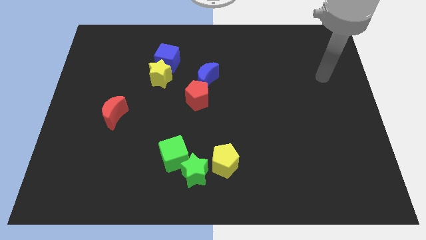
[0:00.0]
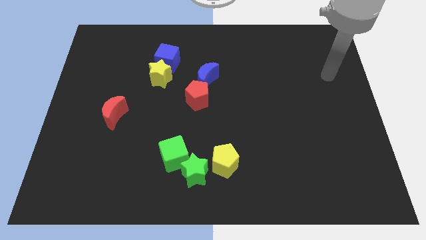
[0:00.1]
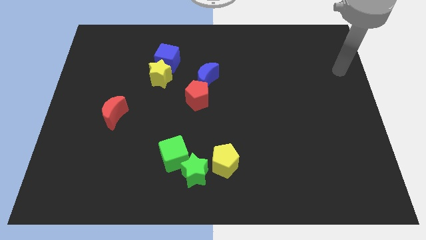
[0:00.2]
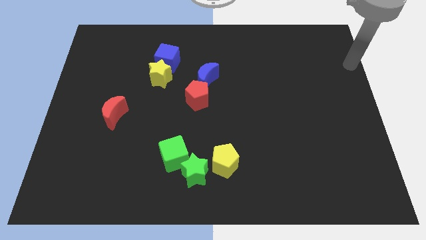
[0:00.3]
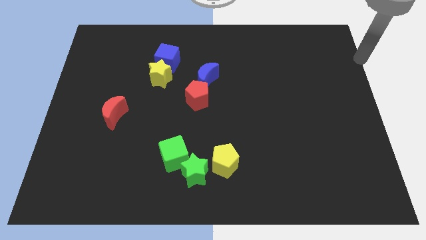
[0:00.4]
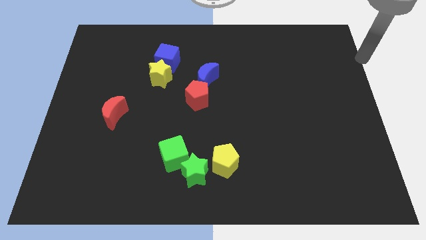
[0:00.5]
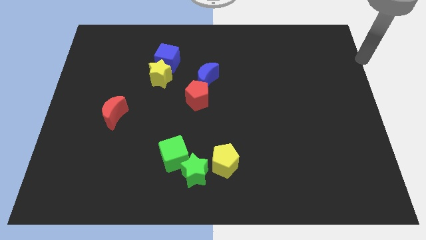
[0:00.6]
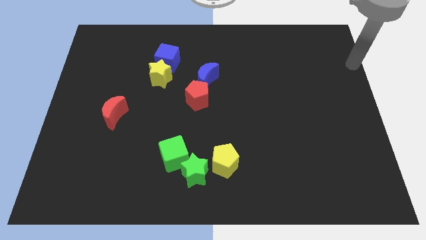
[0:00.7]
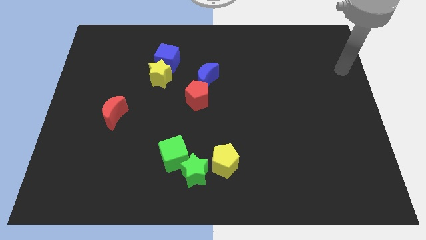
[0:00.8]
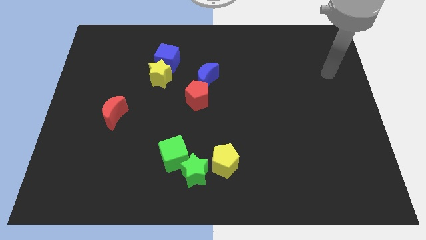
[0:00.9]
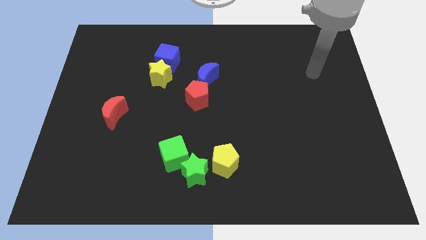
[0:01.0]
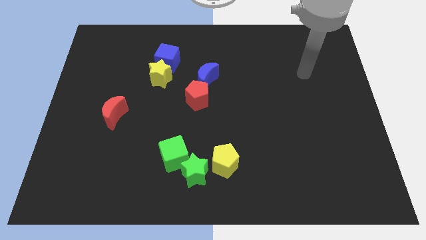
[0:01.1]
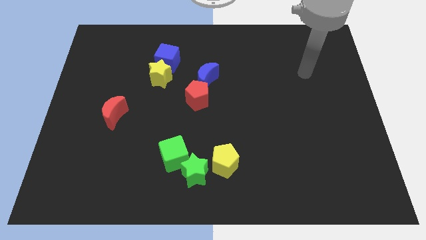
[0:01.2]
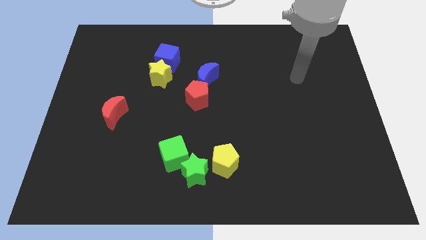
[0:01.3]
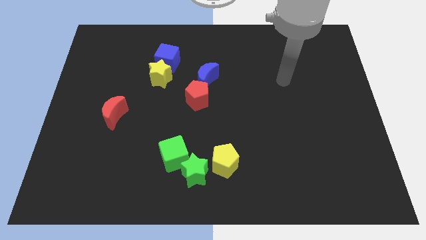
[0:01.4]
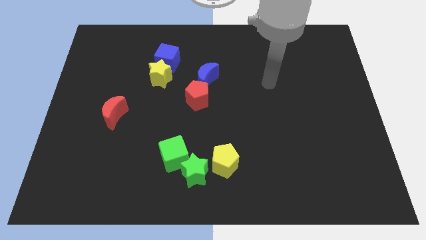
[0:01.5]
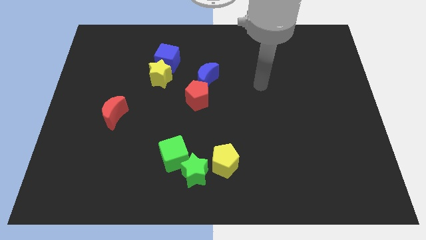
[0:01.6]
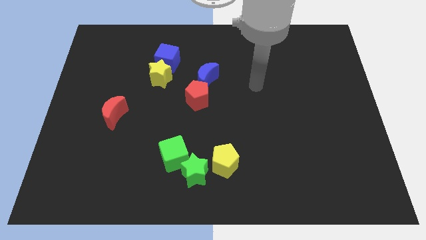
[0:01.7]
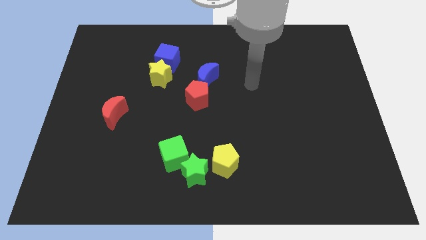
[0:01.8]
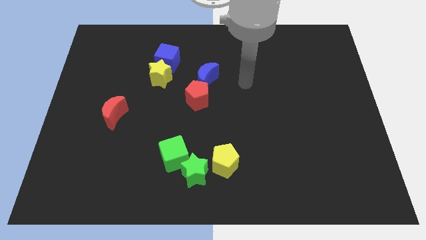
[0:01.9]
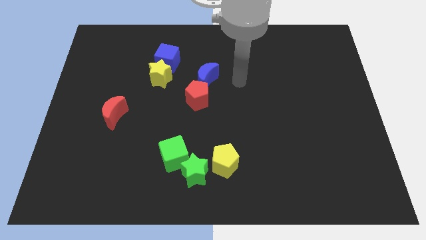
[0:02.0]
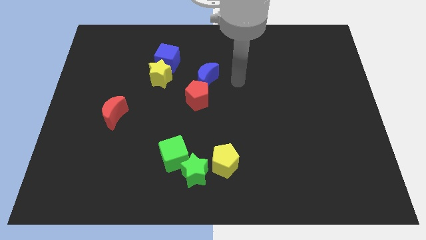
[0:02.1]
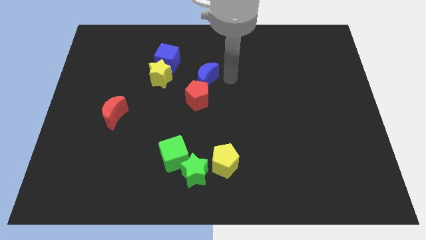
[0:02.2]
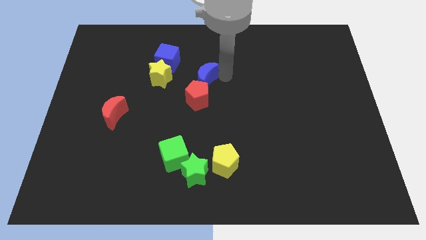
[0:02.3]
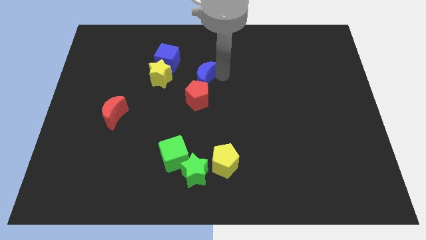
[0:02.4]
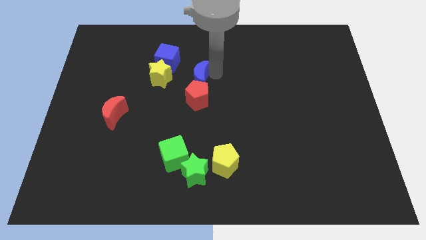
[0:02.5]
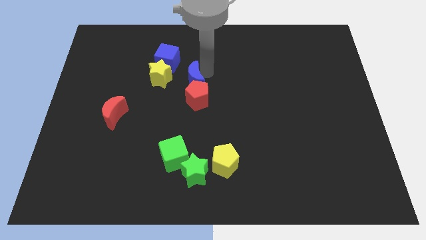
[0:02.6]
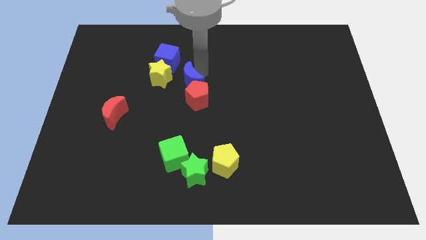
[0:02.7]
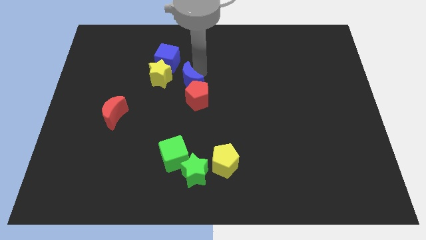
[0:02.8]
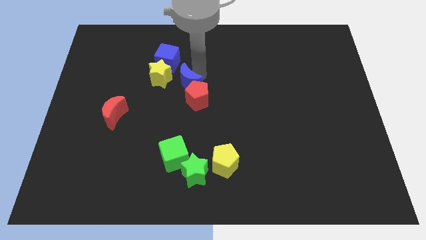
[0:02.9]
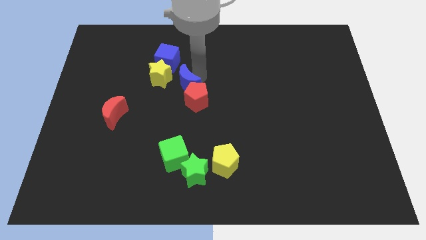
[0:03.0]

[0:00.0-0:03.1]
push the blue crescent into the red pentagon

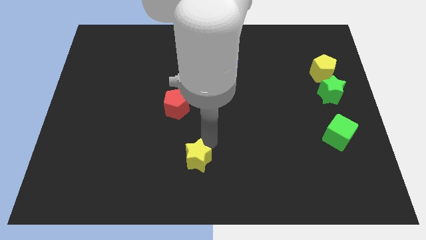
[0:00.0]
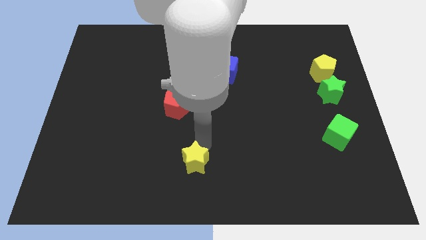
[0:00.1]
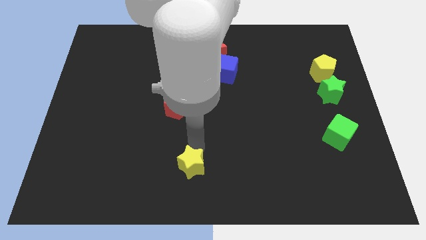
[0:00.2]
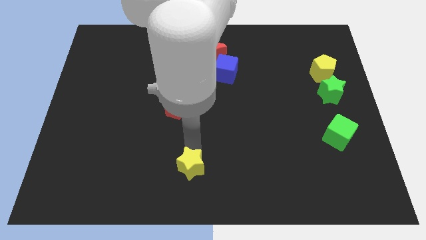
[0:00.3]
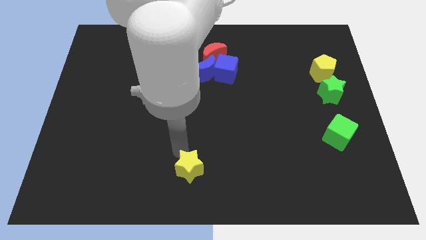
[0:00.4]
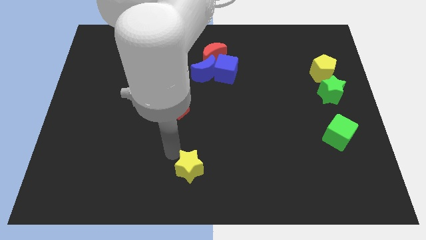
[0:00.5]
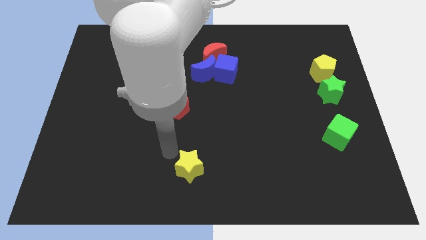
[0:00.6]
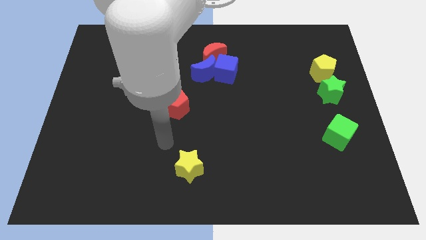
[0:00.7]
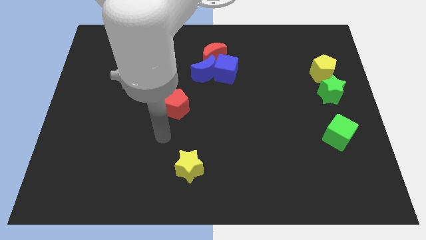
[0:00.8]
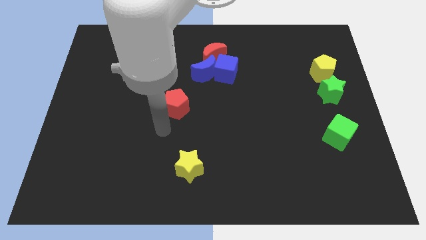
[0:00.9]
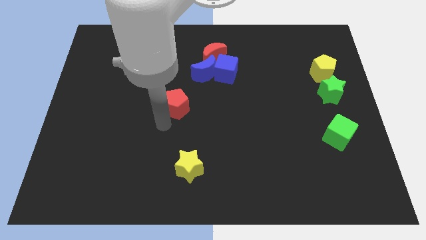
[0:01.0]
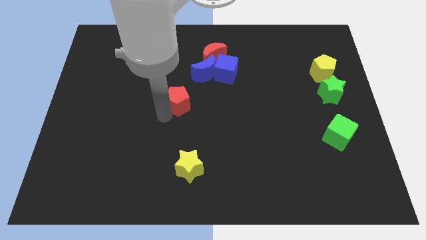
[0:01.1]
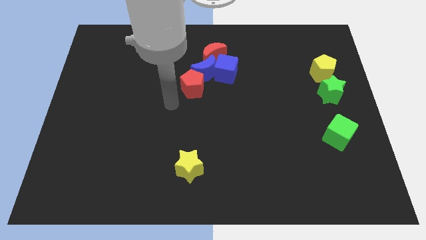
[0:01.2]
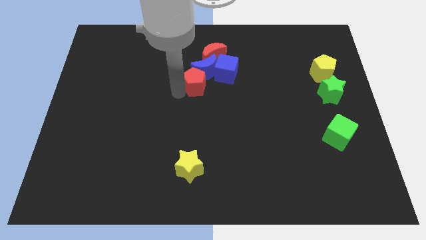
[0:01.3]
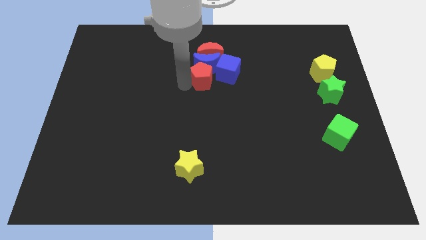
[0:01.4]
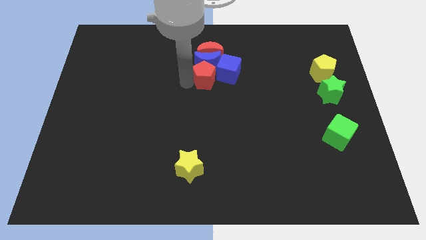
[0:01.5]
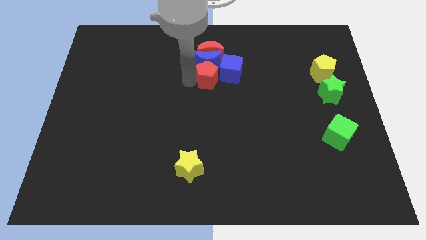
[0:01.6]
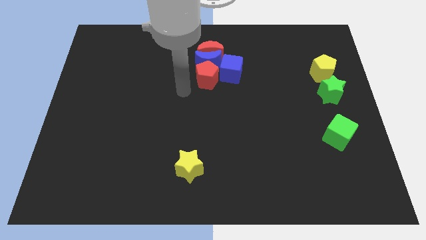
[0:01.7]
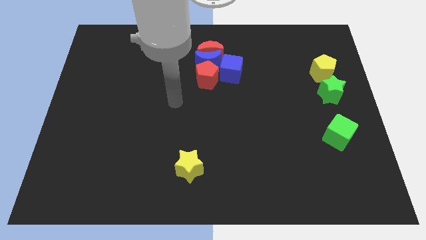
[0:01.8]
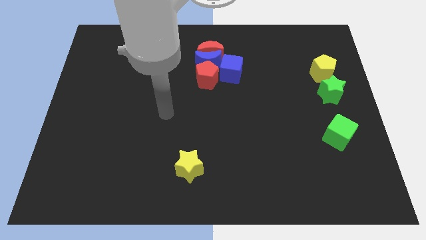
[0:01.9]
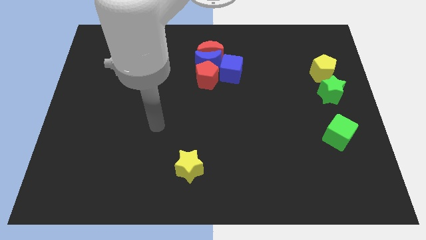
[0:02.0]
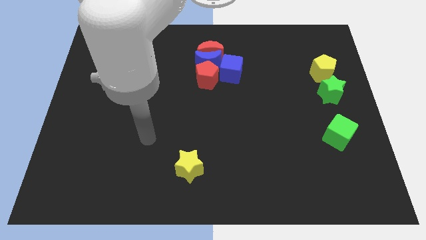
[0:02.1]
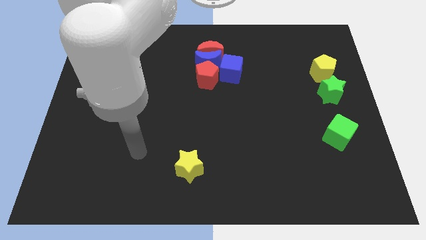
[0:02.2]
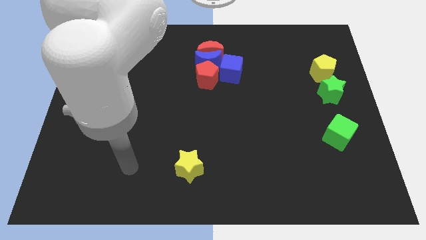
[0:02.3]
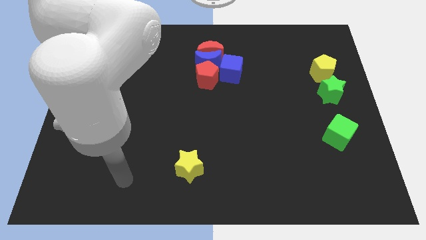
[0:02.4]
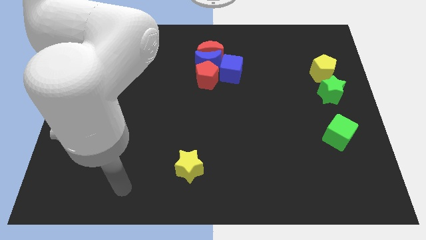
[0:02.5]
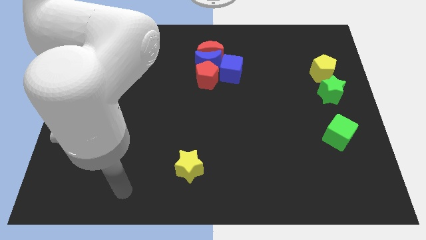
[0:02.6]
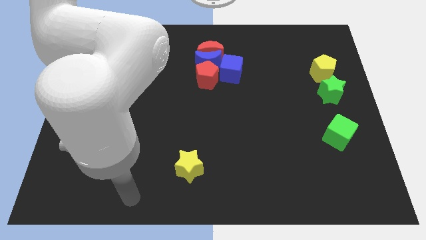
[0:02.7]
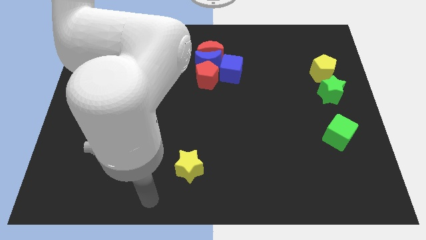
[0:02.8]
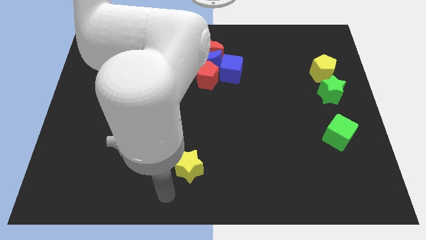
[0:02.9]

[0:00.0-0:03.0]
move the red pentagon into the group of blocks

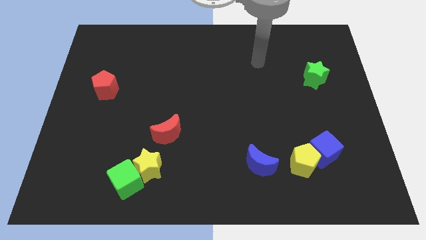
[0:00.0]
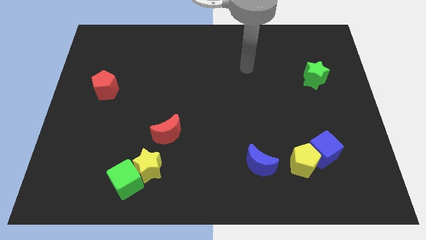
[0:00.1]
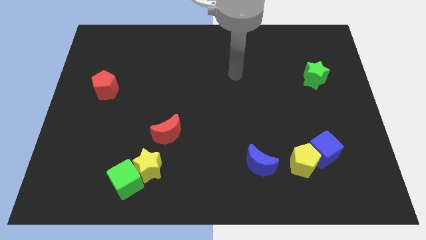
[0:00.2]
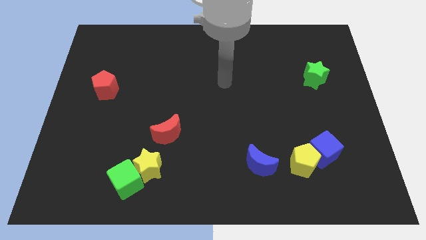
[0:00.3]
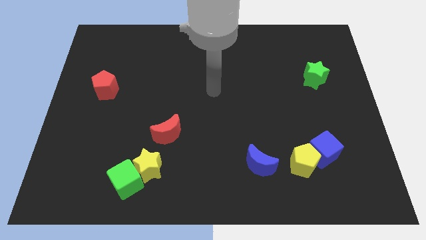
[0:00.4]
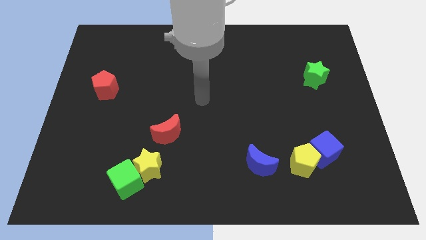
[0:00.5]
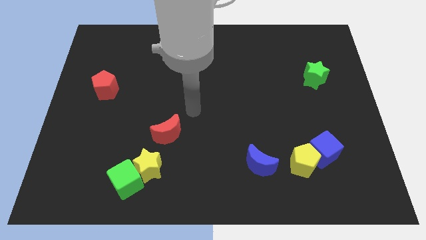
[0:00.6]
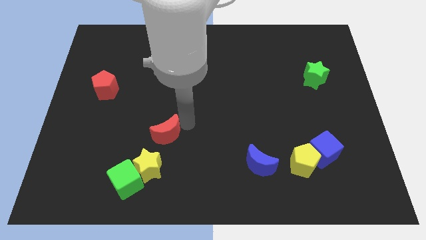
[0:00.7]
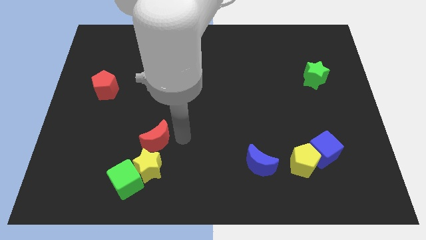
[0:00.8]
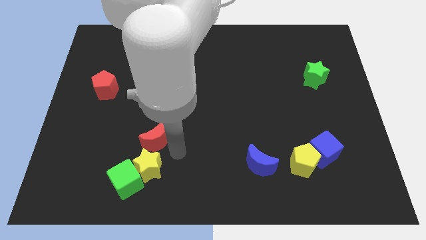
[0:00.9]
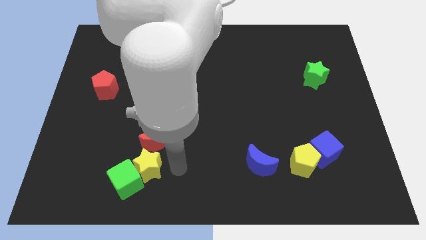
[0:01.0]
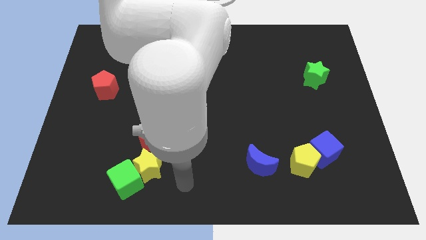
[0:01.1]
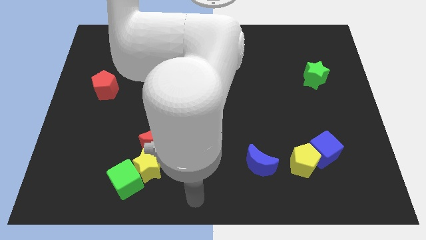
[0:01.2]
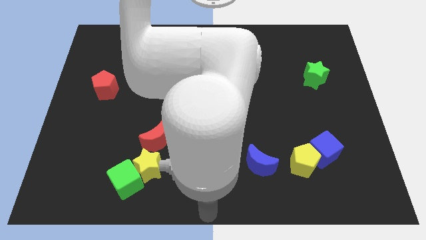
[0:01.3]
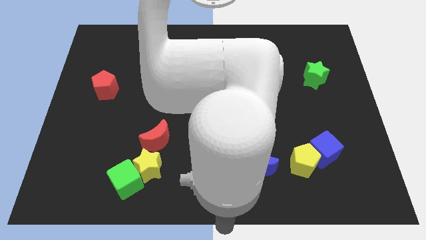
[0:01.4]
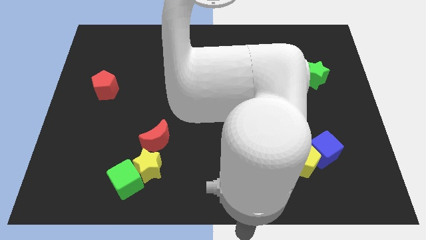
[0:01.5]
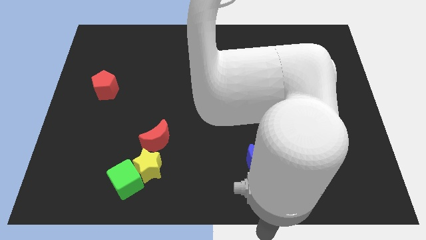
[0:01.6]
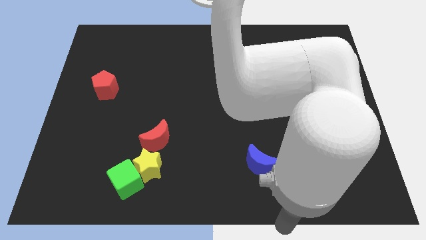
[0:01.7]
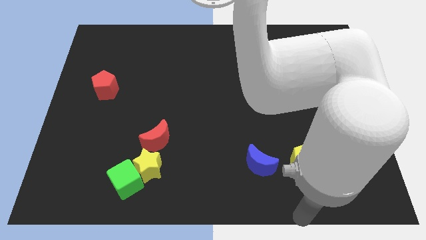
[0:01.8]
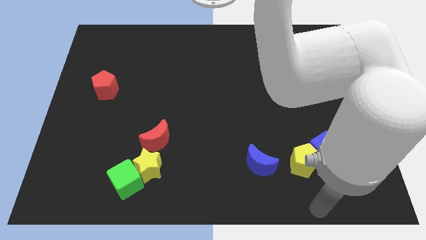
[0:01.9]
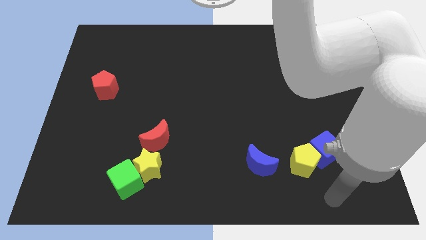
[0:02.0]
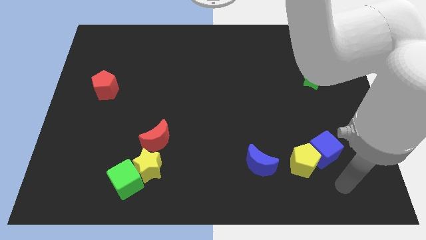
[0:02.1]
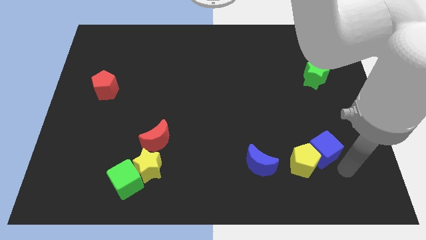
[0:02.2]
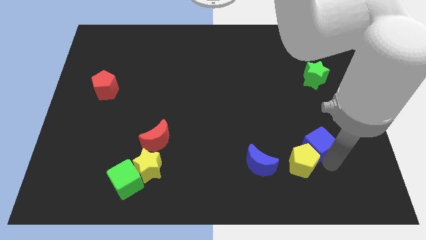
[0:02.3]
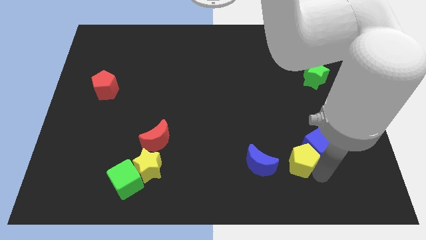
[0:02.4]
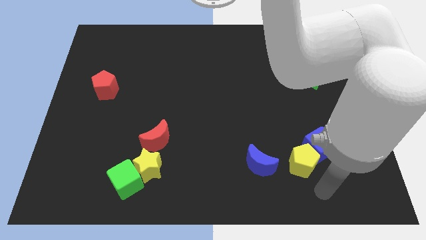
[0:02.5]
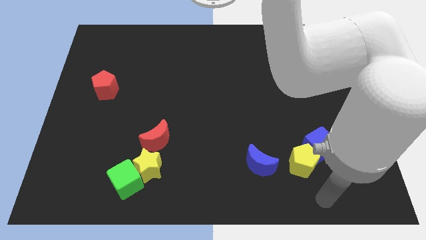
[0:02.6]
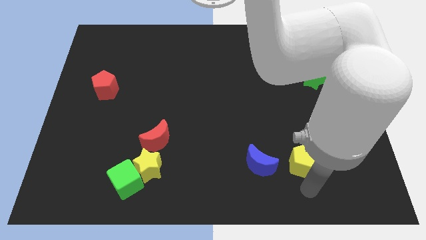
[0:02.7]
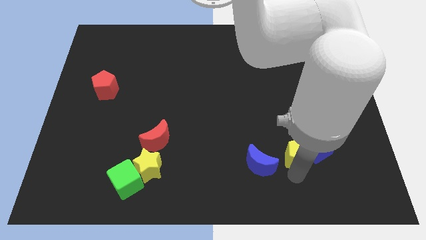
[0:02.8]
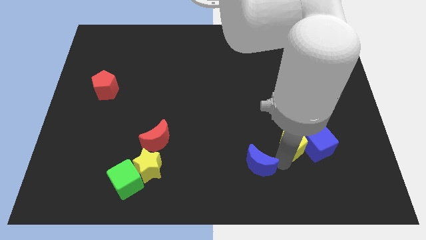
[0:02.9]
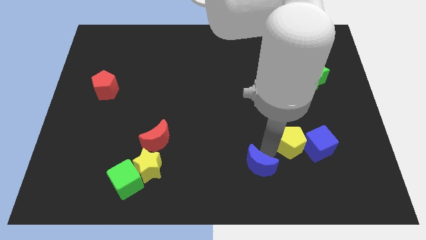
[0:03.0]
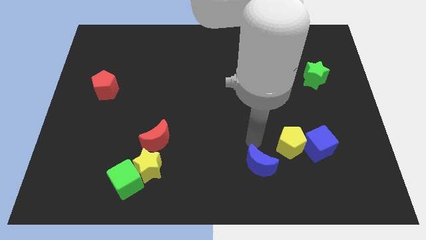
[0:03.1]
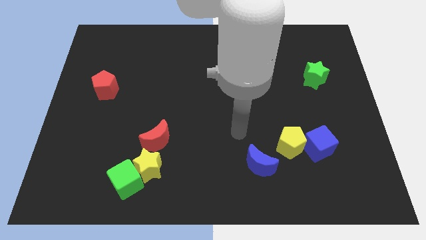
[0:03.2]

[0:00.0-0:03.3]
slightly touch the red moon yellow pentagon and blue cube
